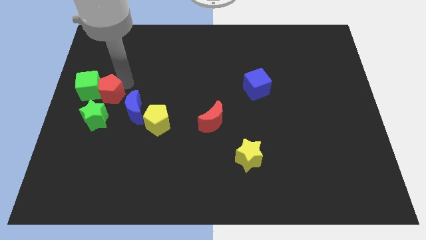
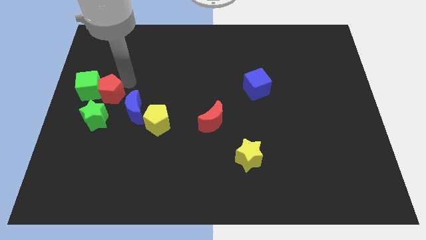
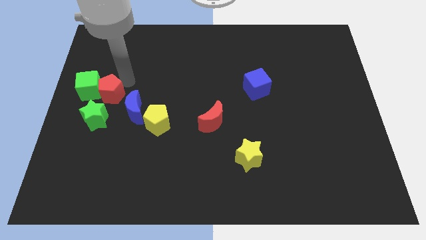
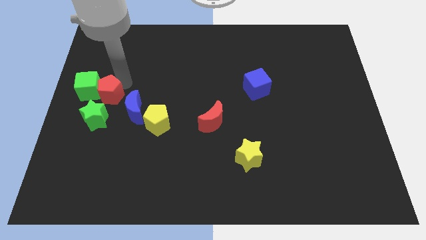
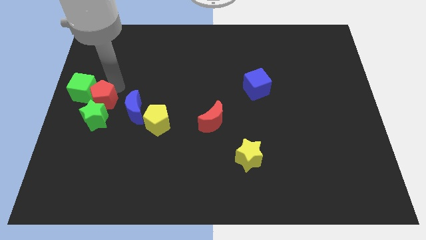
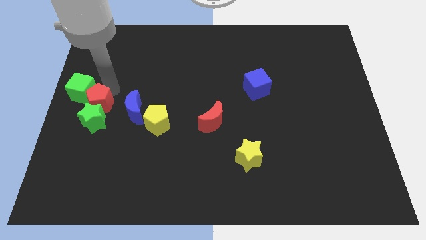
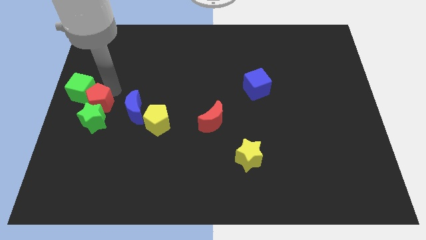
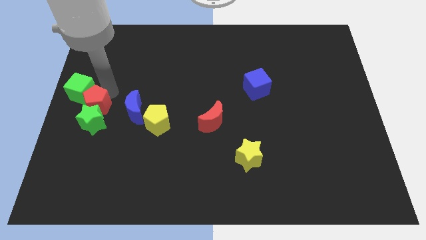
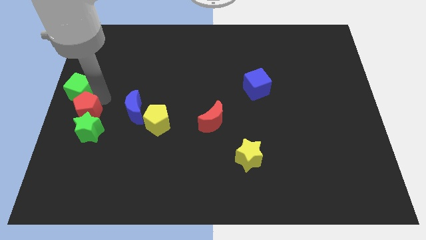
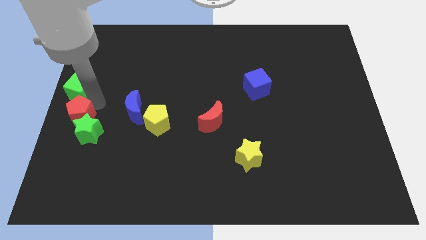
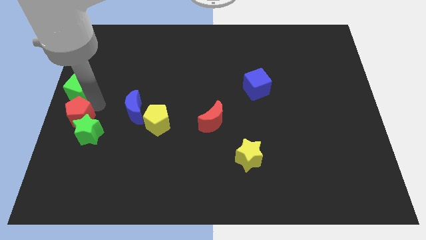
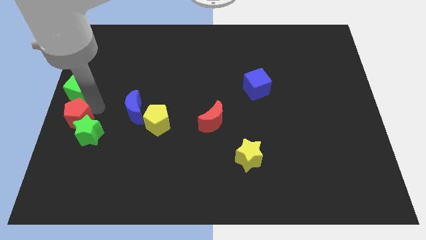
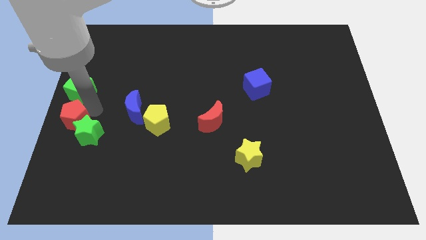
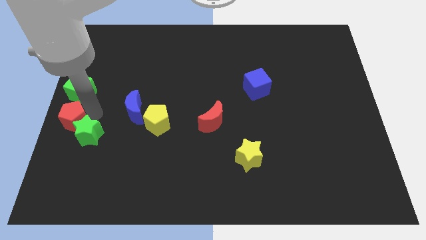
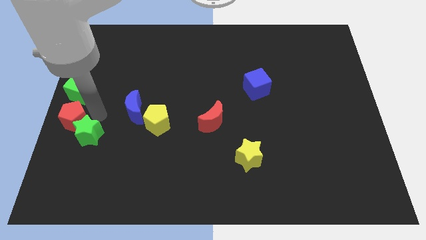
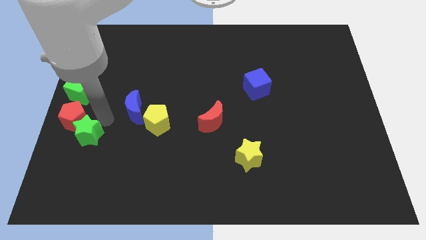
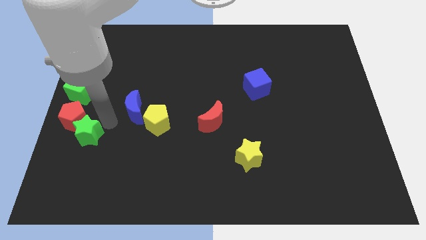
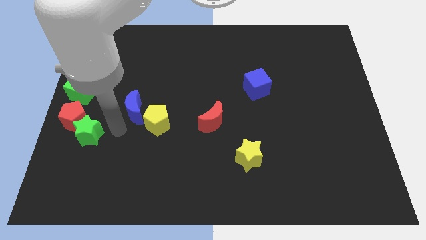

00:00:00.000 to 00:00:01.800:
move the red pentagon into the green star

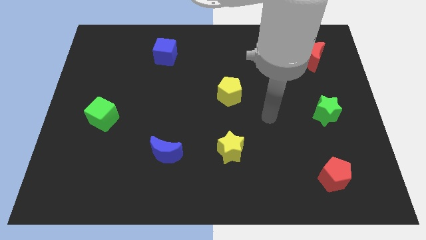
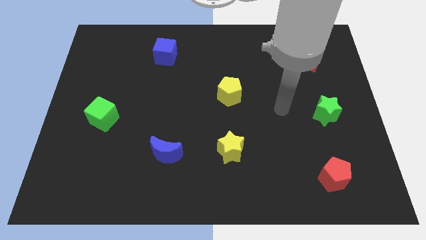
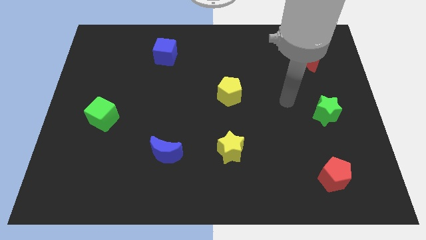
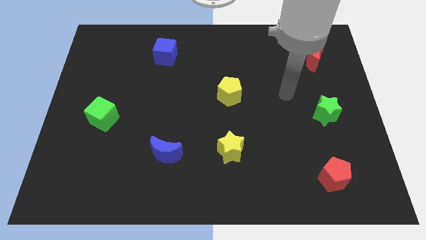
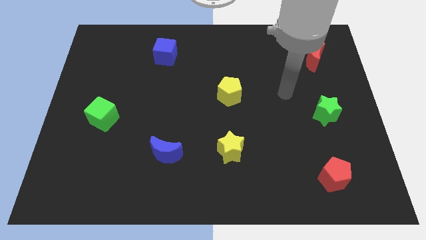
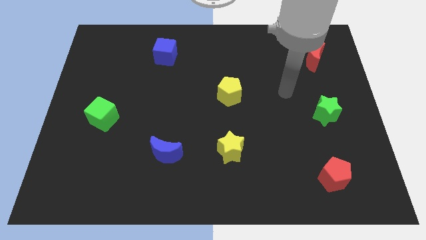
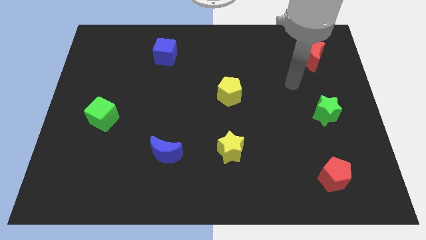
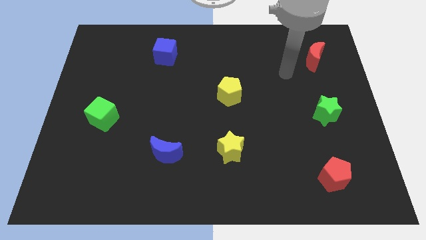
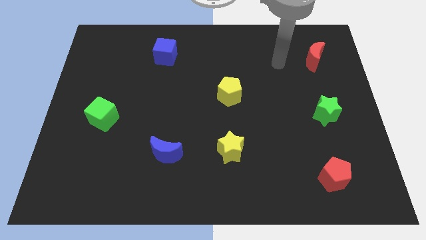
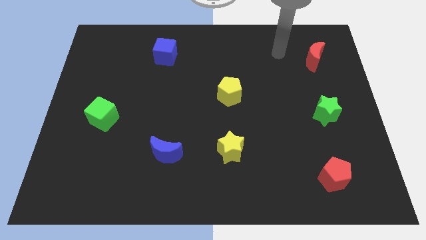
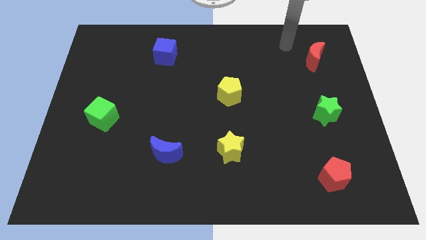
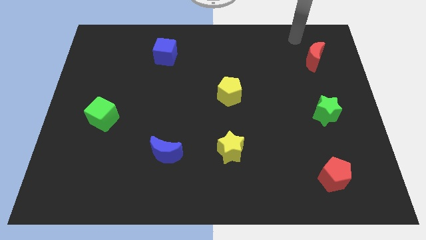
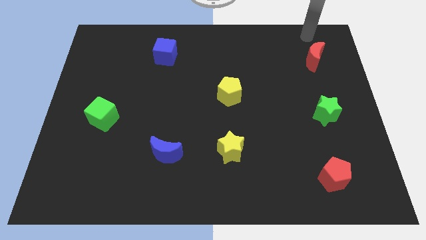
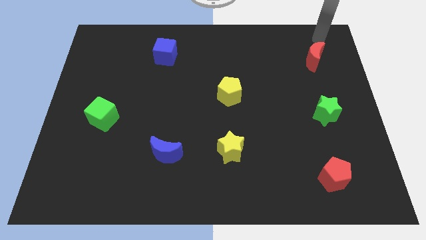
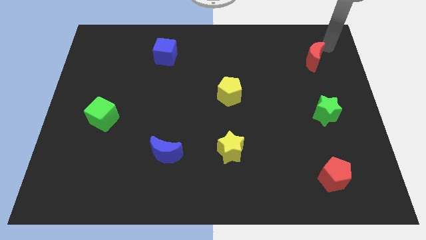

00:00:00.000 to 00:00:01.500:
go near the red moon

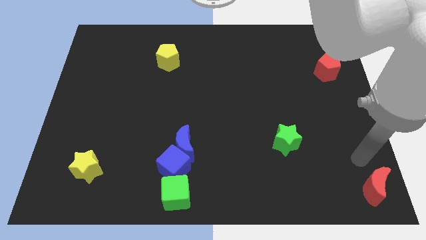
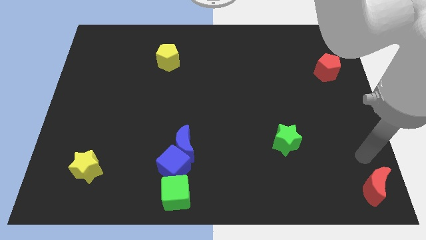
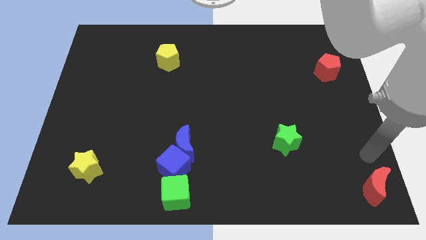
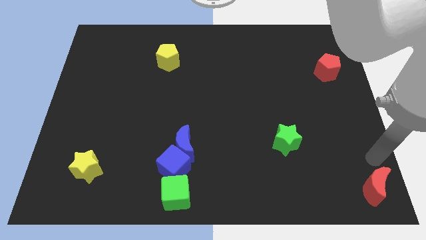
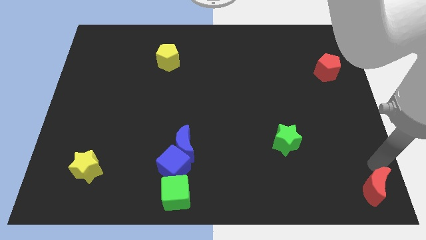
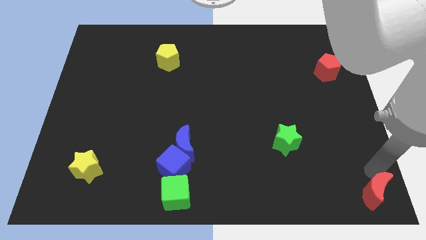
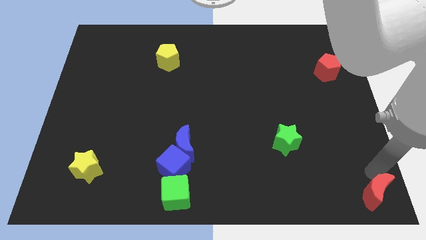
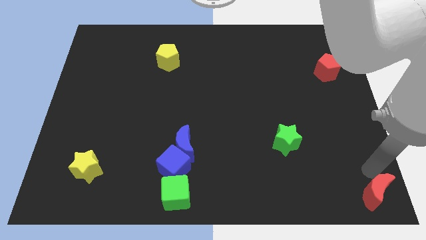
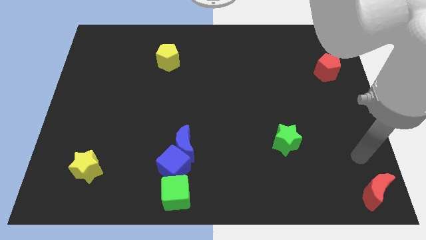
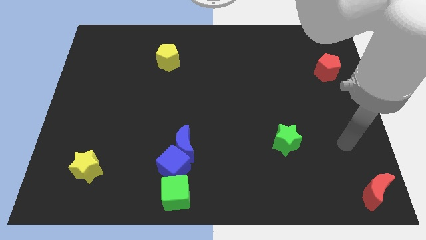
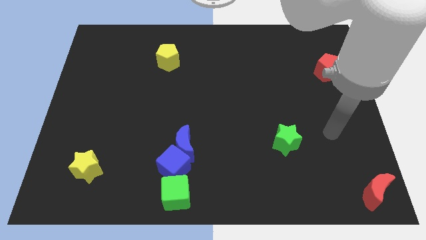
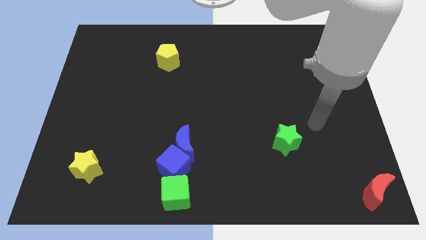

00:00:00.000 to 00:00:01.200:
push the red moon to the bottom right corner

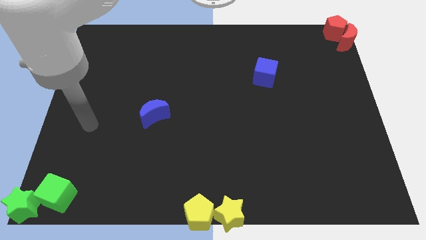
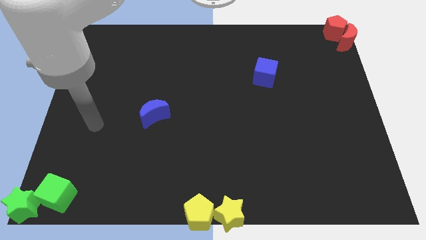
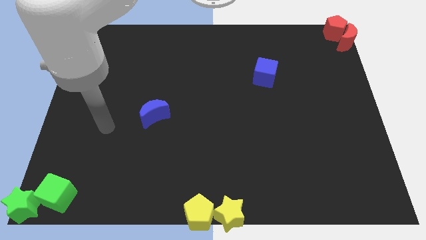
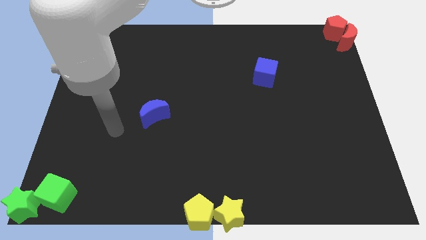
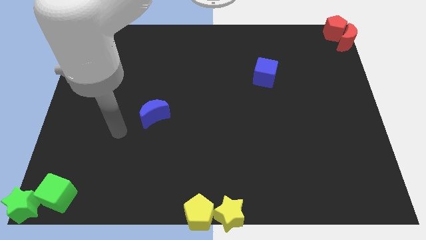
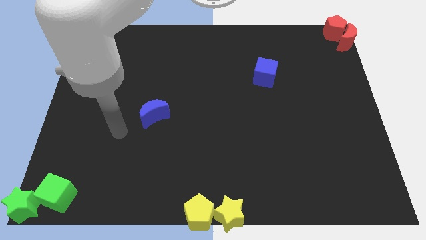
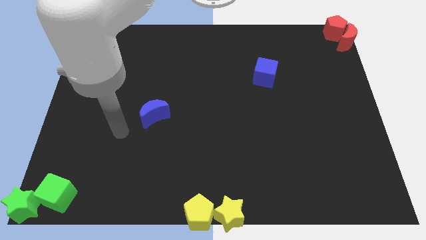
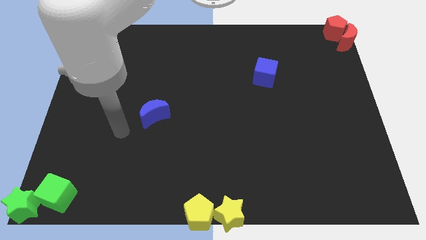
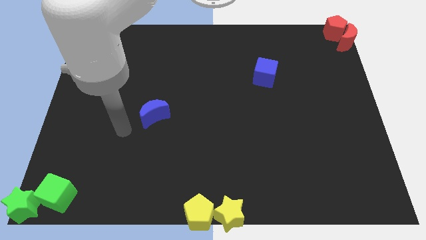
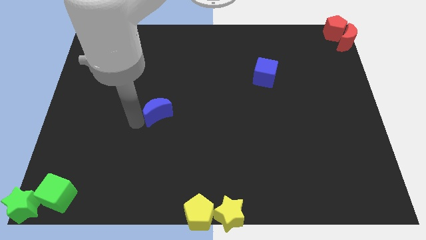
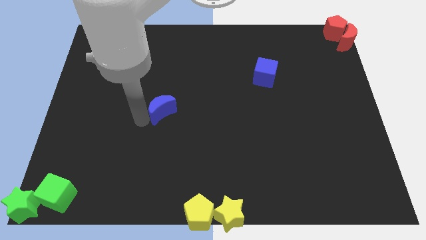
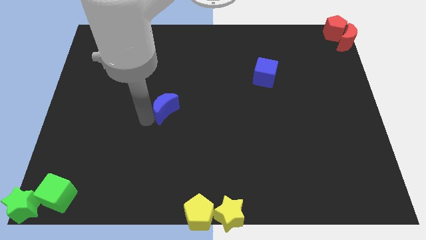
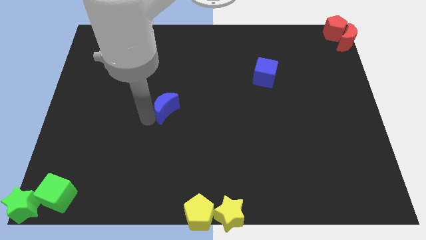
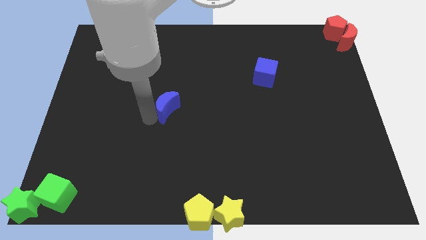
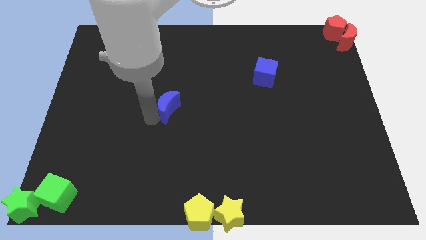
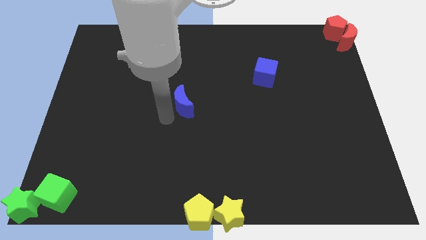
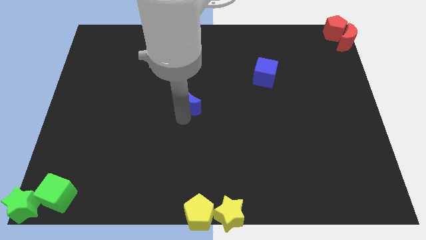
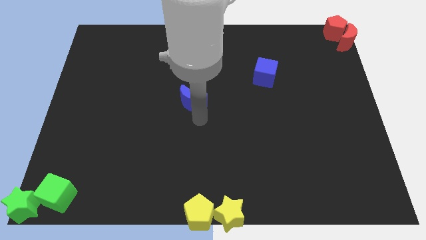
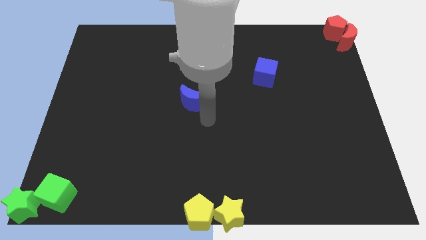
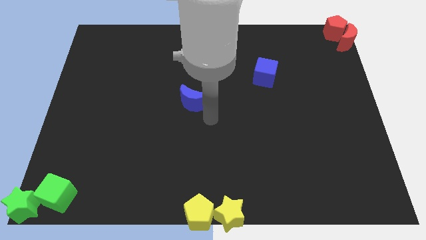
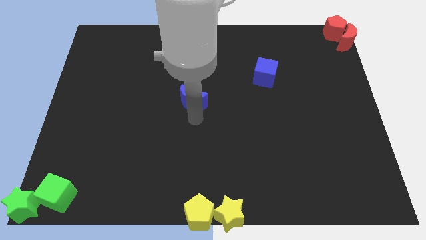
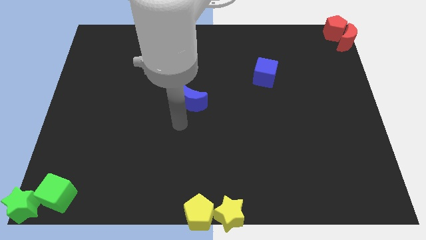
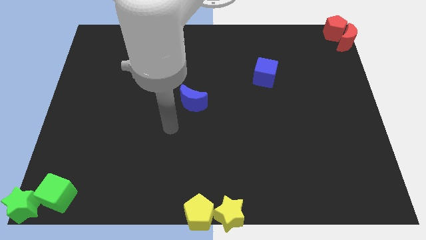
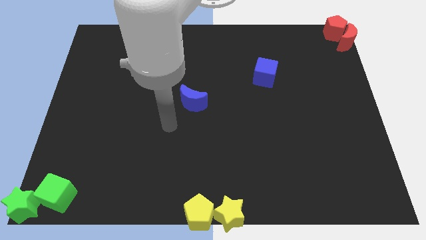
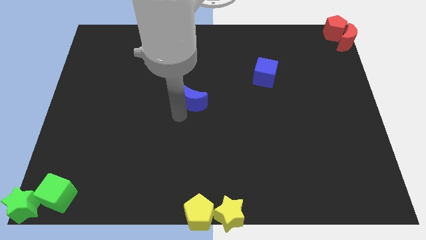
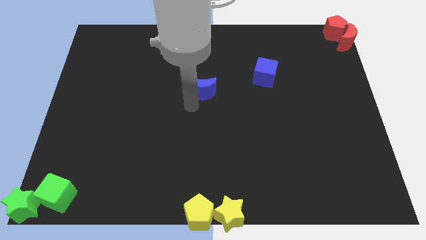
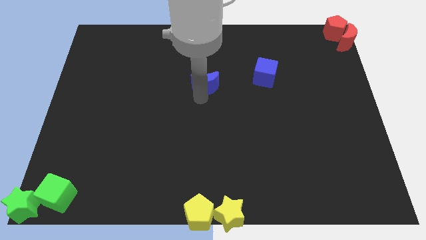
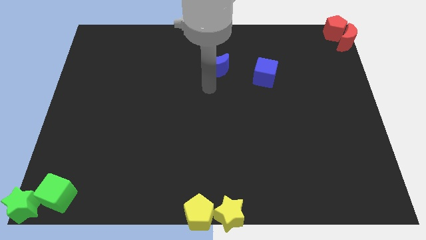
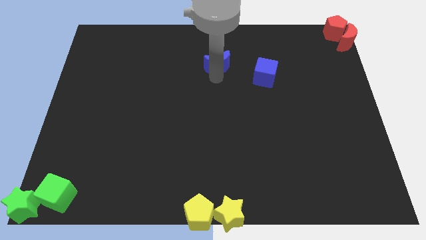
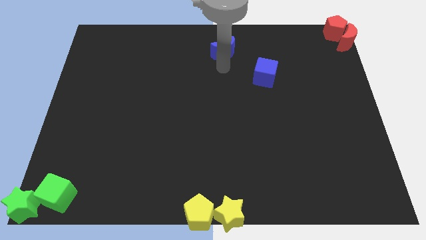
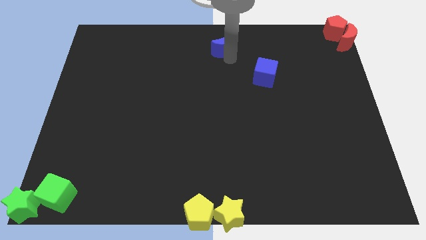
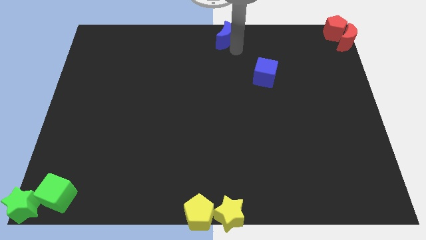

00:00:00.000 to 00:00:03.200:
put the blue moon vertically above the yellow star

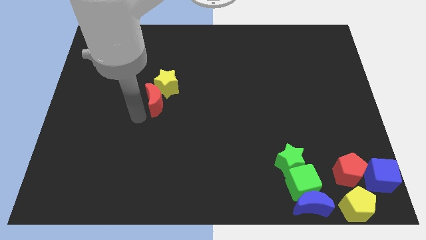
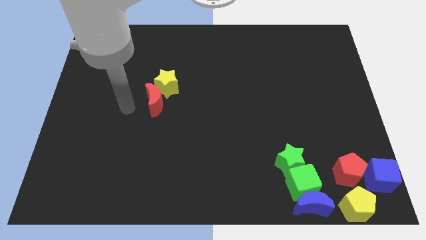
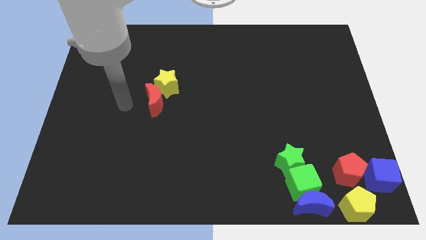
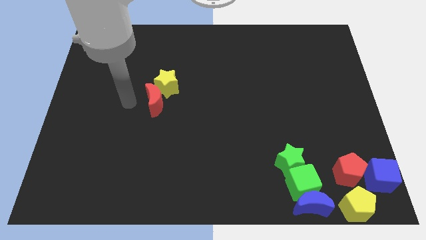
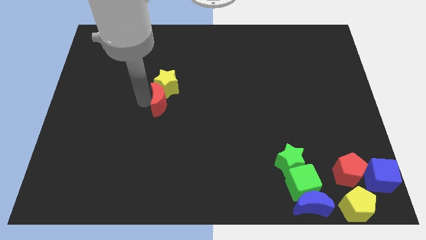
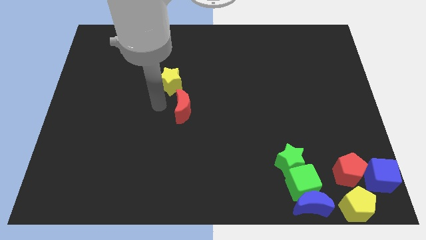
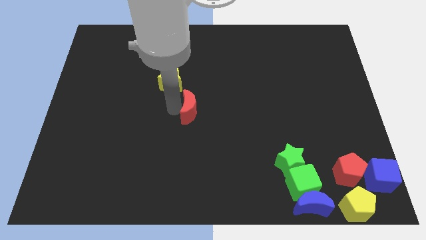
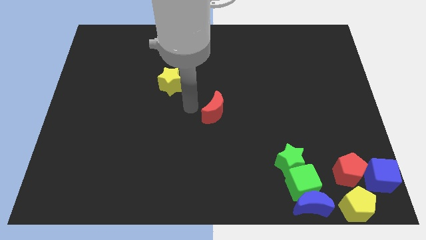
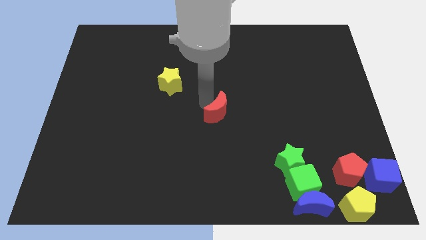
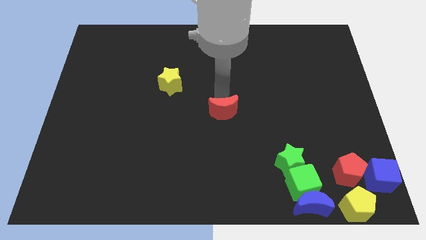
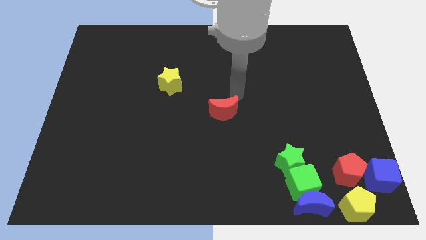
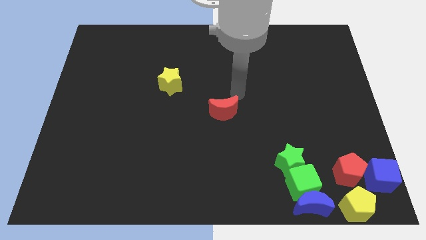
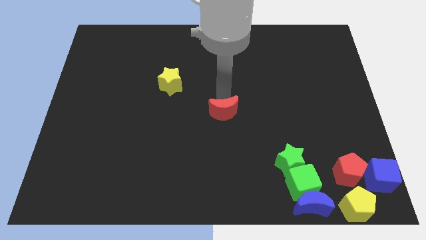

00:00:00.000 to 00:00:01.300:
separate red crescent from the yellow star

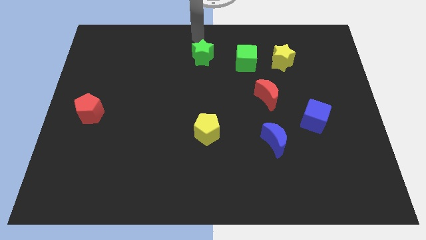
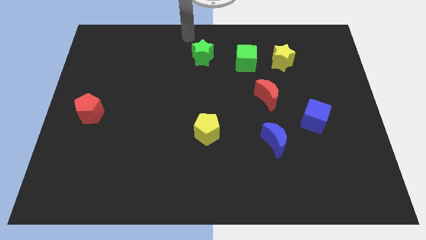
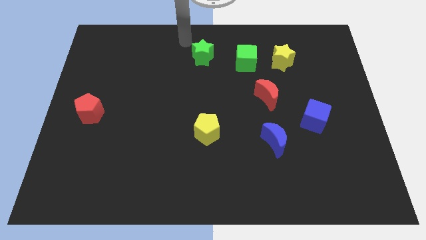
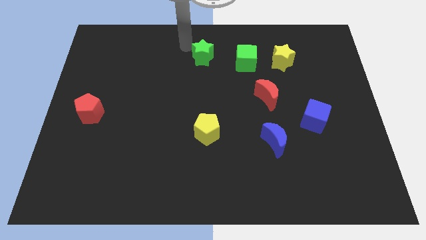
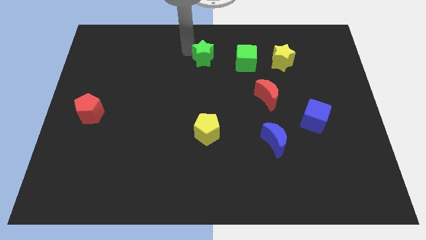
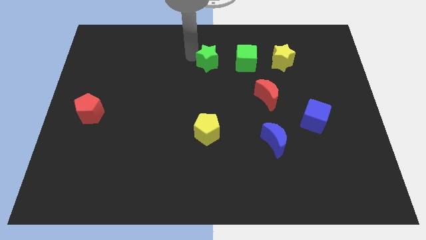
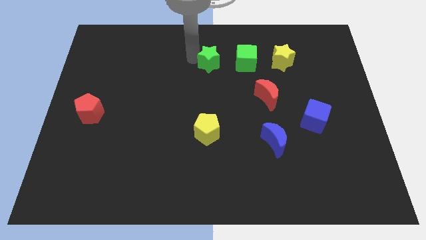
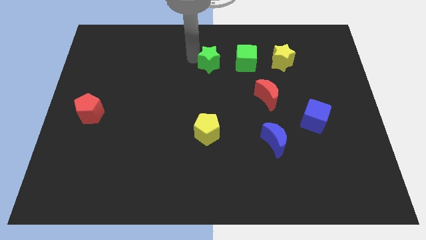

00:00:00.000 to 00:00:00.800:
move the green star downwards
